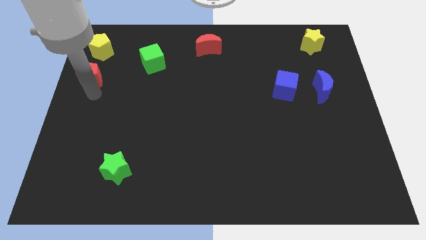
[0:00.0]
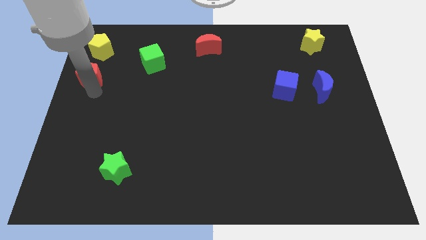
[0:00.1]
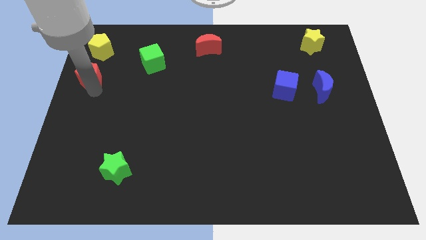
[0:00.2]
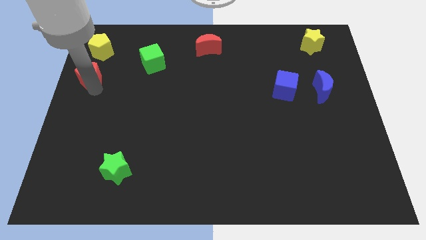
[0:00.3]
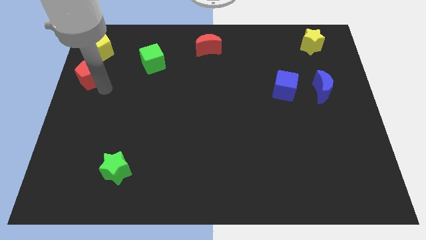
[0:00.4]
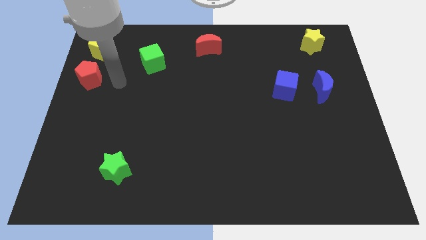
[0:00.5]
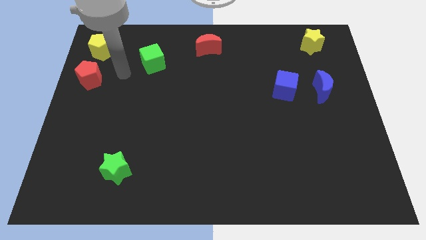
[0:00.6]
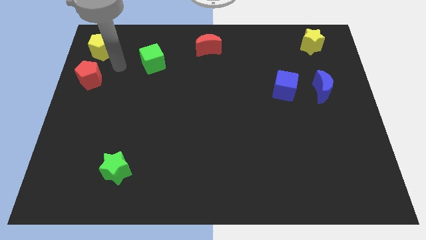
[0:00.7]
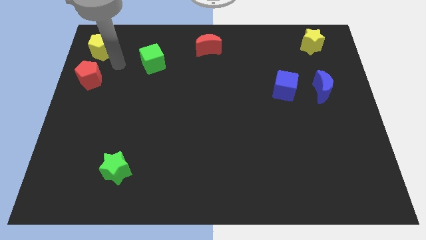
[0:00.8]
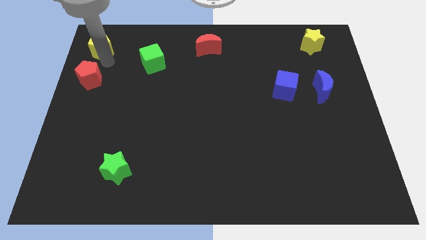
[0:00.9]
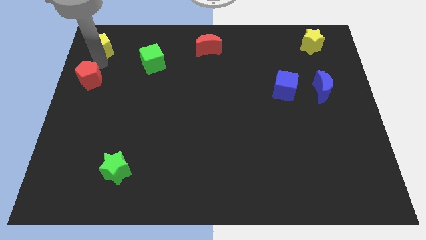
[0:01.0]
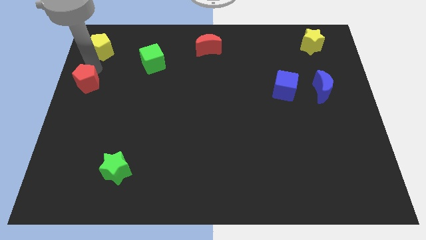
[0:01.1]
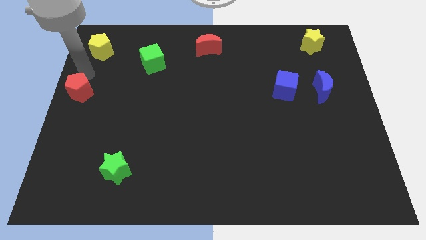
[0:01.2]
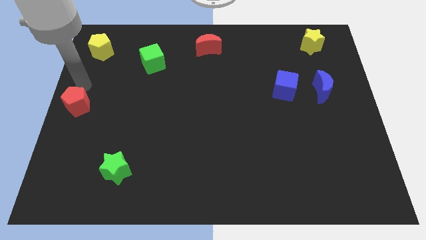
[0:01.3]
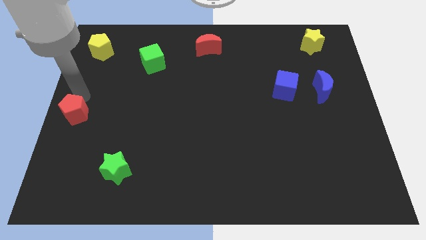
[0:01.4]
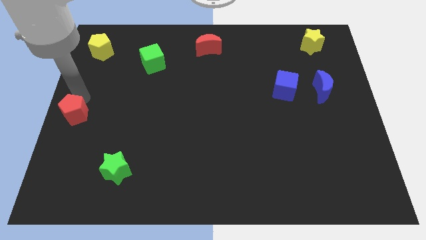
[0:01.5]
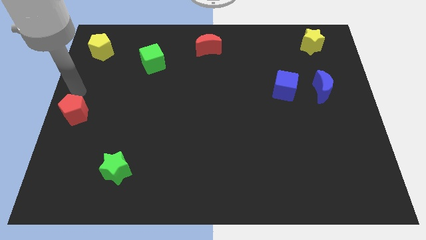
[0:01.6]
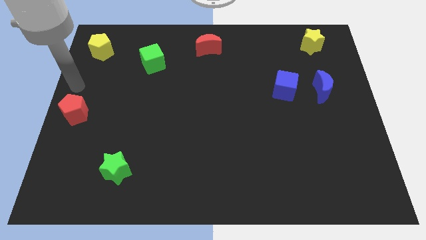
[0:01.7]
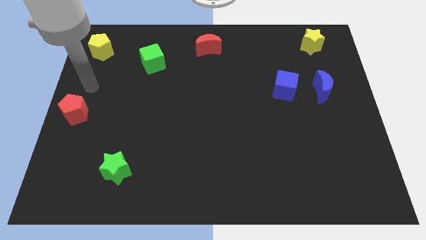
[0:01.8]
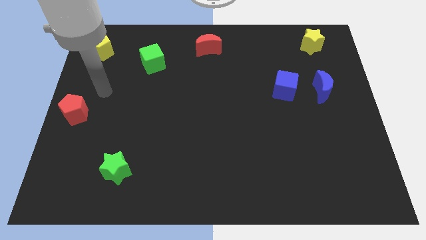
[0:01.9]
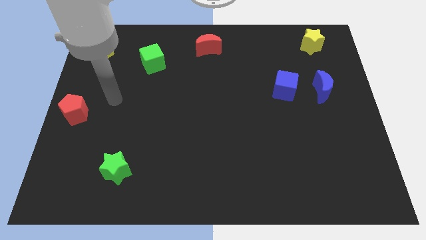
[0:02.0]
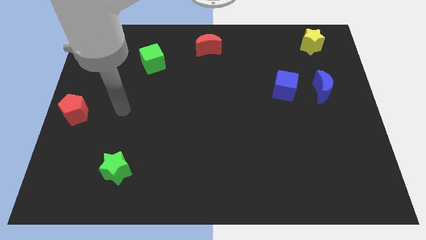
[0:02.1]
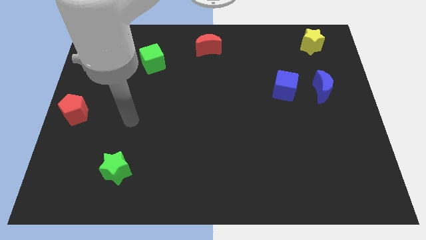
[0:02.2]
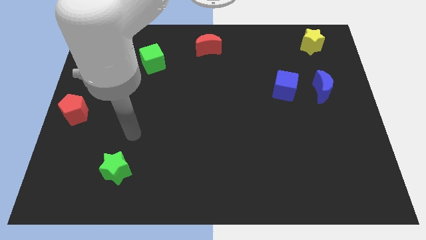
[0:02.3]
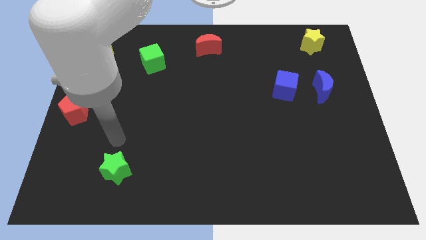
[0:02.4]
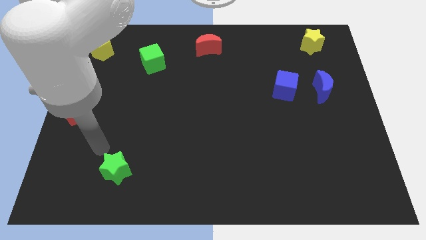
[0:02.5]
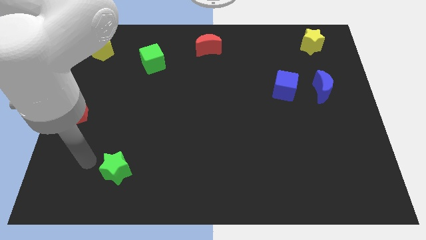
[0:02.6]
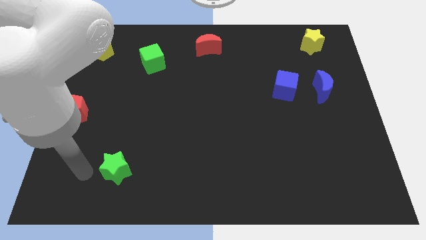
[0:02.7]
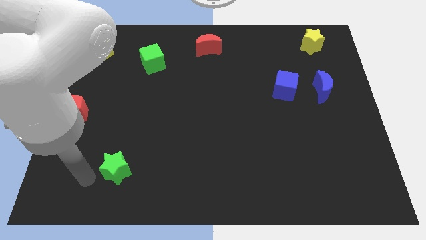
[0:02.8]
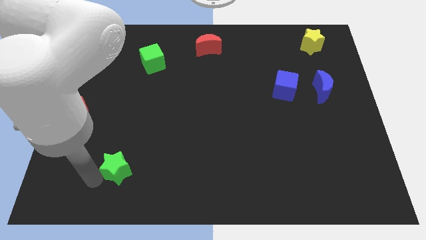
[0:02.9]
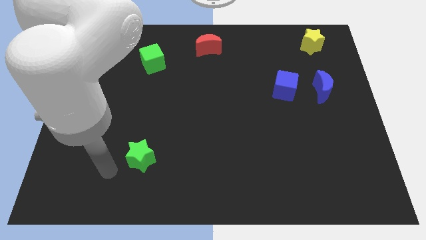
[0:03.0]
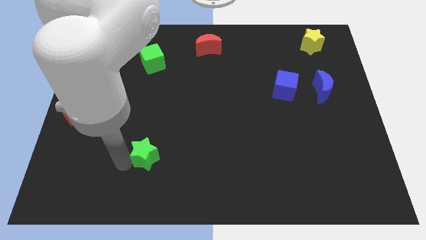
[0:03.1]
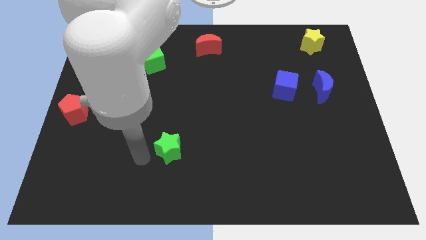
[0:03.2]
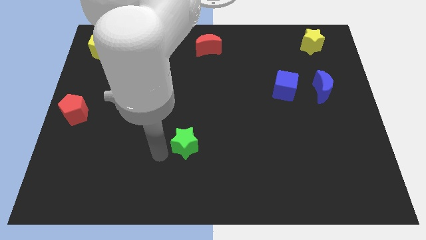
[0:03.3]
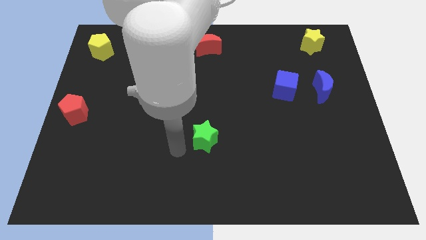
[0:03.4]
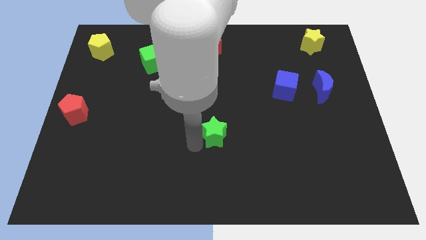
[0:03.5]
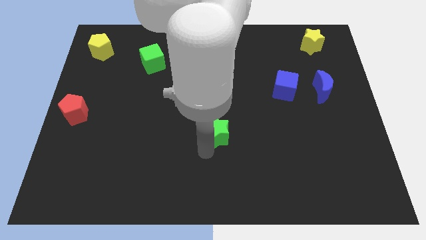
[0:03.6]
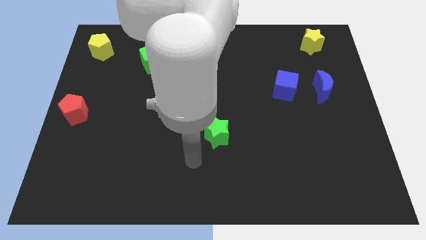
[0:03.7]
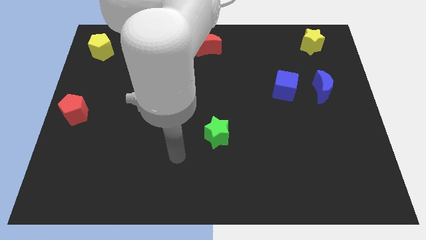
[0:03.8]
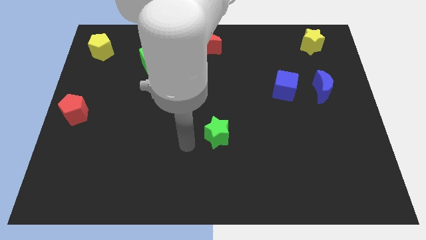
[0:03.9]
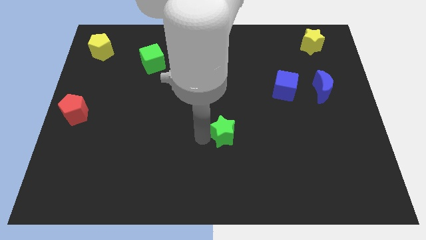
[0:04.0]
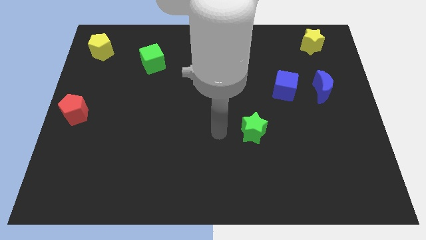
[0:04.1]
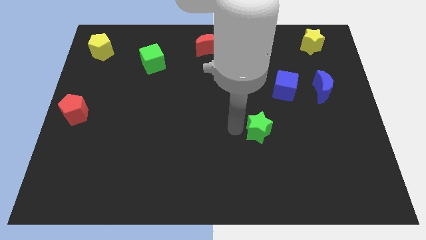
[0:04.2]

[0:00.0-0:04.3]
move the red pentagon to the left center

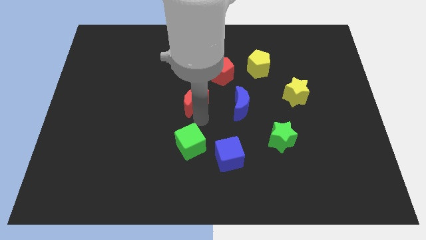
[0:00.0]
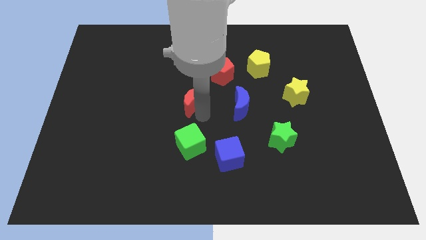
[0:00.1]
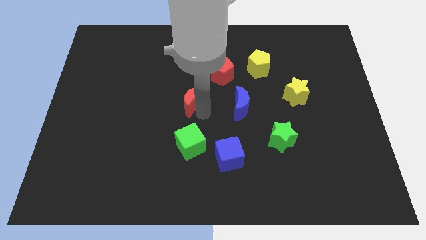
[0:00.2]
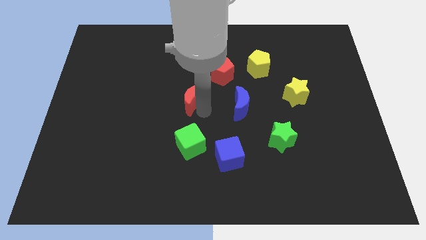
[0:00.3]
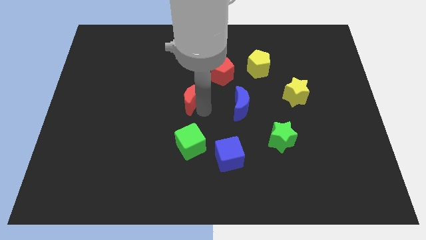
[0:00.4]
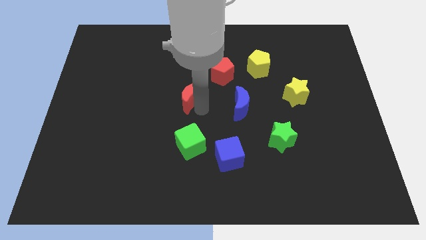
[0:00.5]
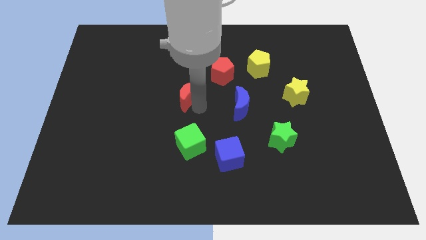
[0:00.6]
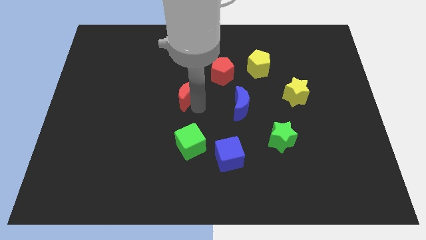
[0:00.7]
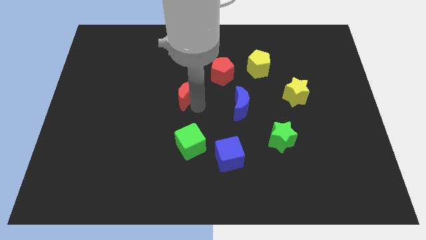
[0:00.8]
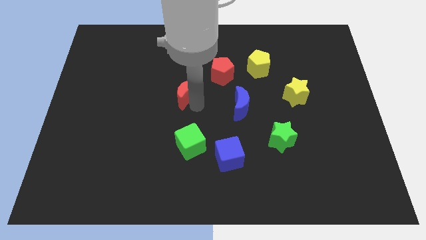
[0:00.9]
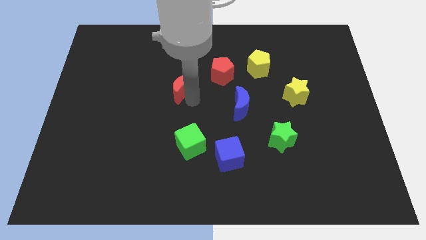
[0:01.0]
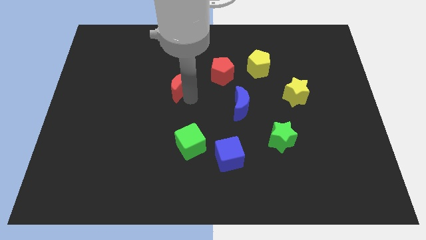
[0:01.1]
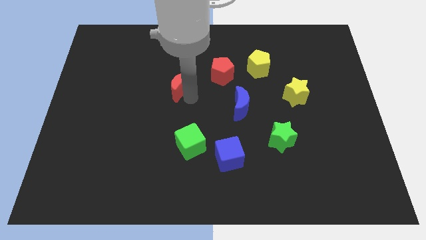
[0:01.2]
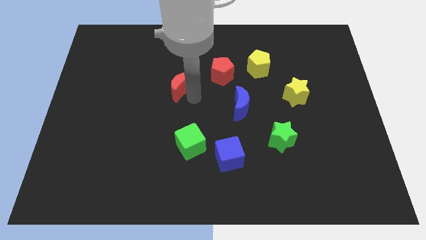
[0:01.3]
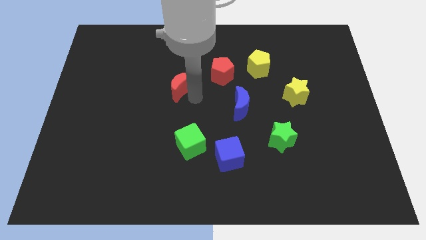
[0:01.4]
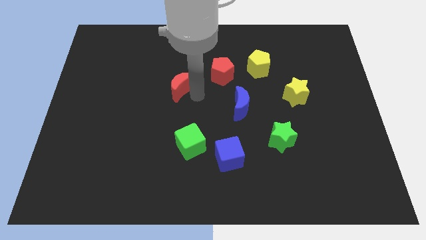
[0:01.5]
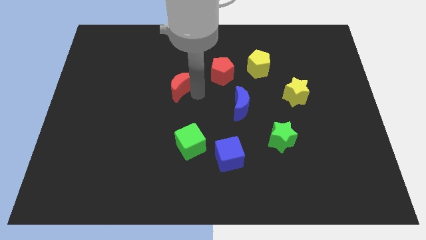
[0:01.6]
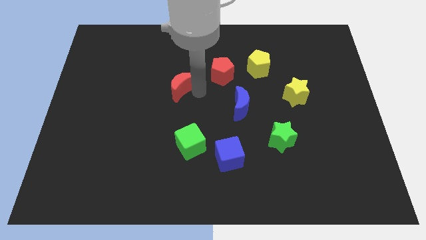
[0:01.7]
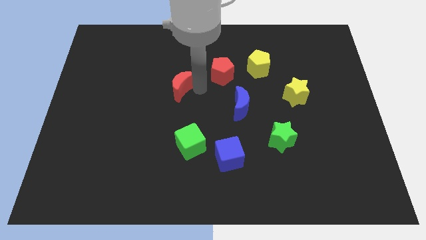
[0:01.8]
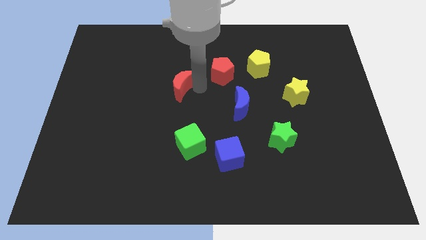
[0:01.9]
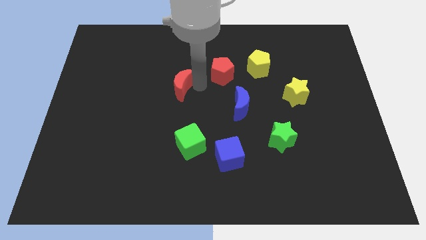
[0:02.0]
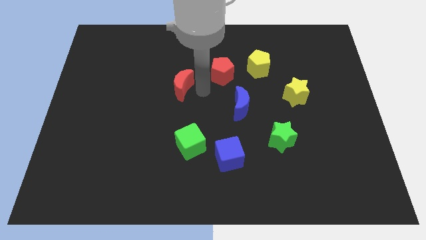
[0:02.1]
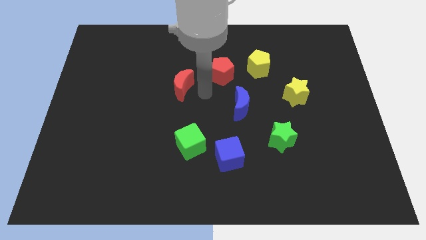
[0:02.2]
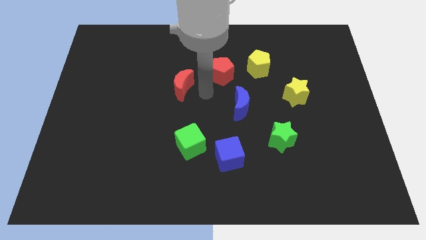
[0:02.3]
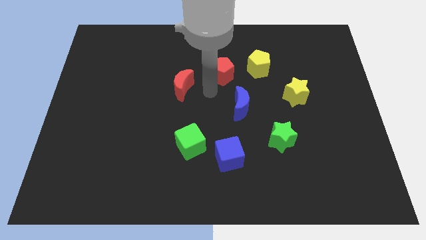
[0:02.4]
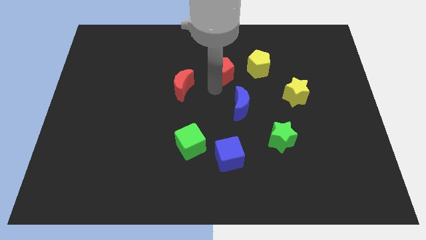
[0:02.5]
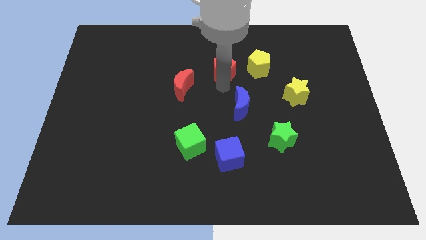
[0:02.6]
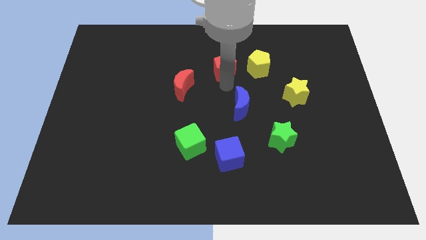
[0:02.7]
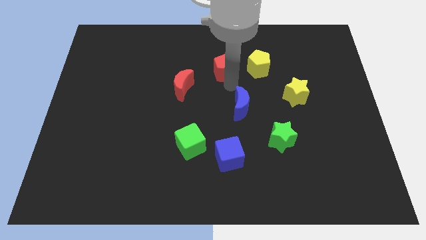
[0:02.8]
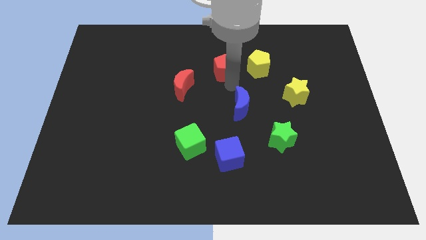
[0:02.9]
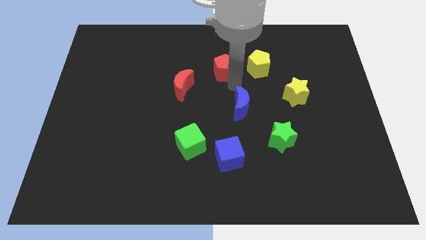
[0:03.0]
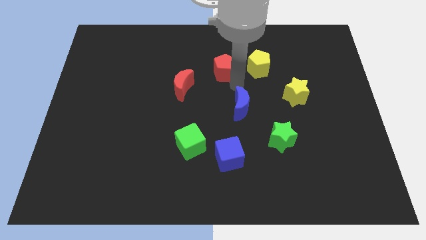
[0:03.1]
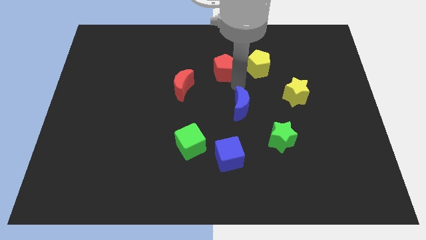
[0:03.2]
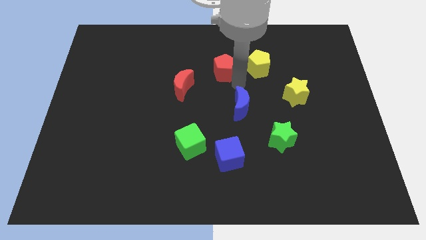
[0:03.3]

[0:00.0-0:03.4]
move the red blocks slightly on top of the board

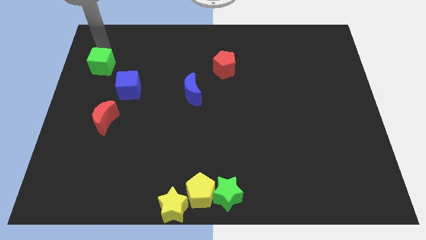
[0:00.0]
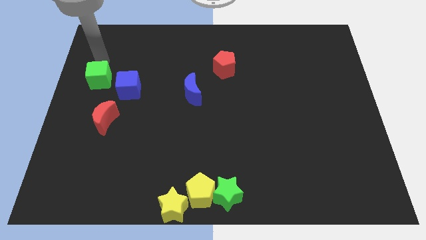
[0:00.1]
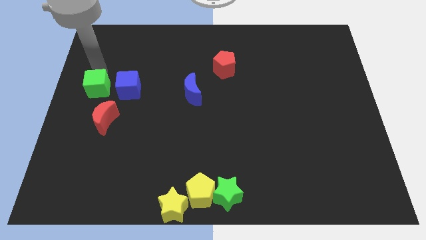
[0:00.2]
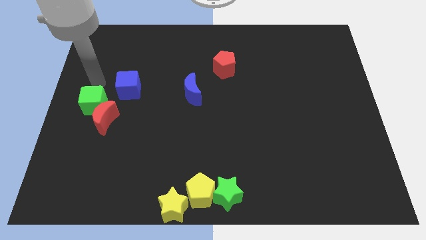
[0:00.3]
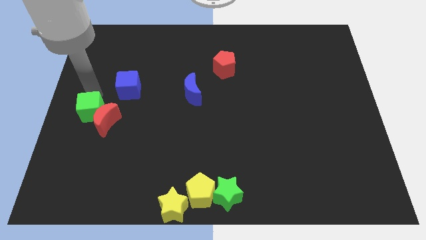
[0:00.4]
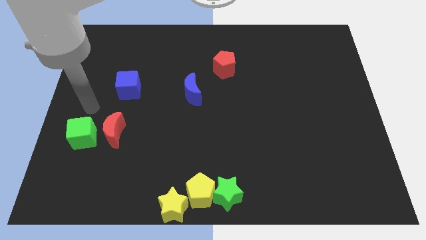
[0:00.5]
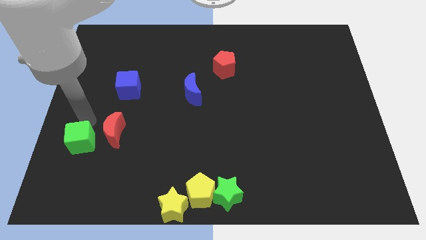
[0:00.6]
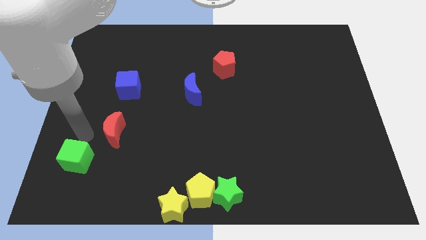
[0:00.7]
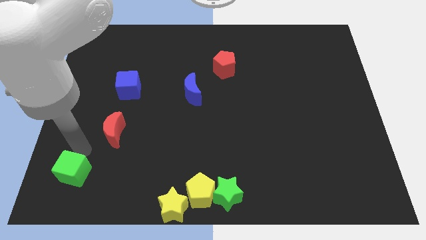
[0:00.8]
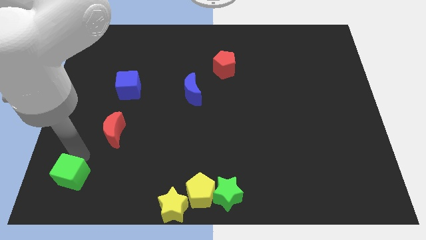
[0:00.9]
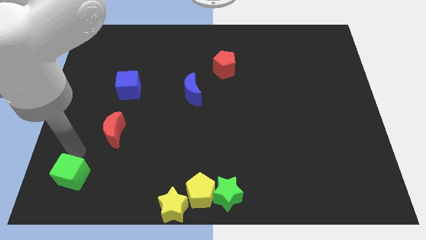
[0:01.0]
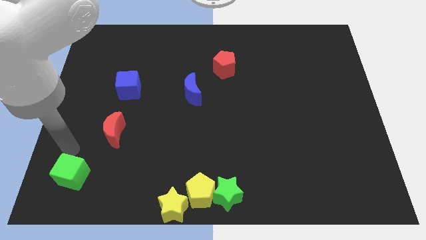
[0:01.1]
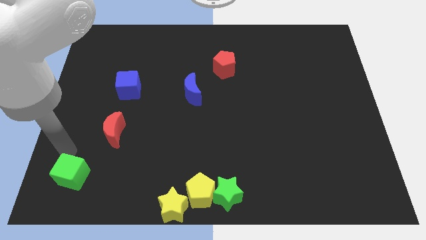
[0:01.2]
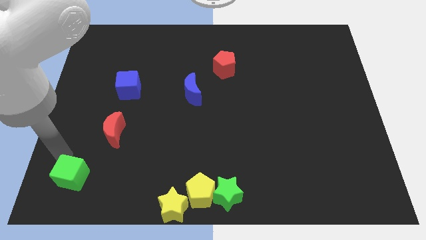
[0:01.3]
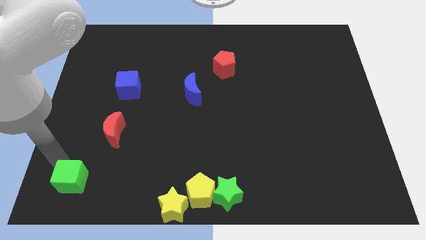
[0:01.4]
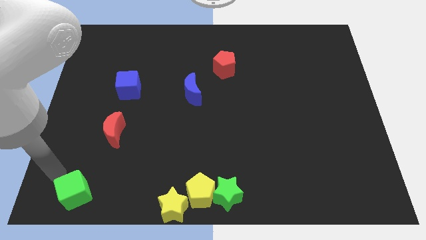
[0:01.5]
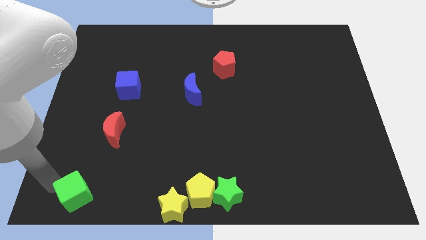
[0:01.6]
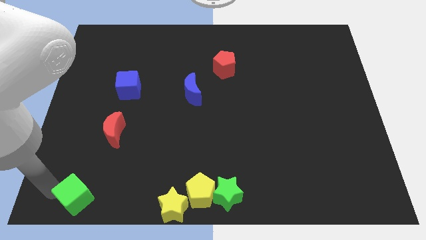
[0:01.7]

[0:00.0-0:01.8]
drag green cube towards bottom left of the board
